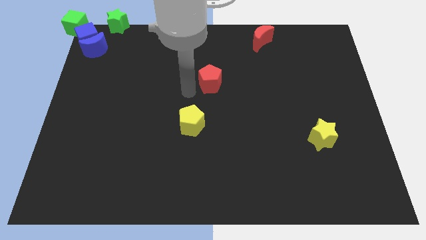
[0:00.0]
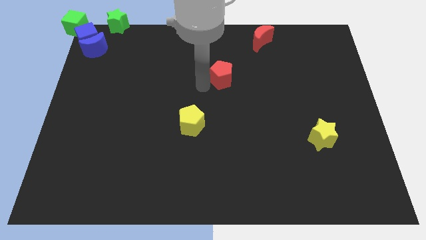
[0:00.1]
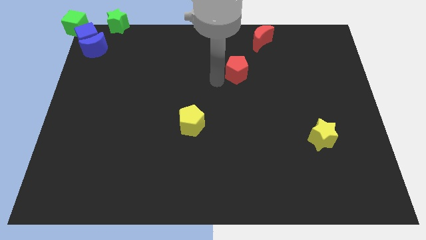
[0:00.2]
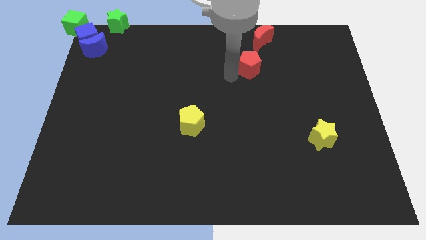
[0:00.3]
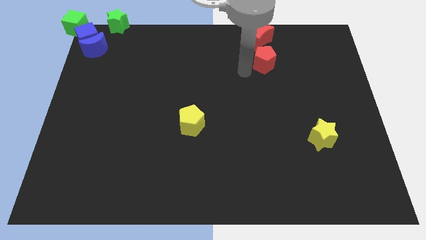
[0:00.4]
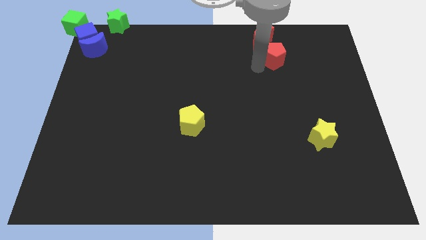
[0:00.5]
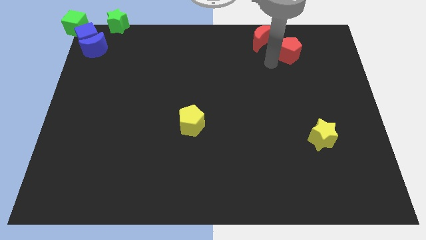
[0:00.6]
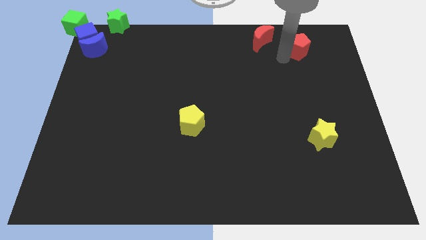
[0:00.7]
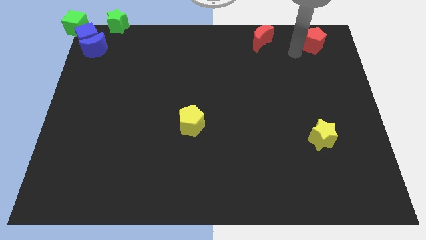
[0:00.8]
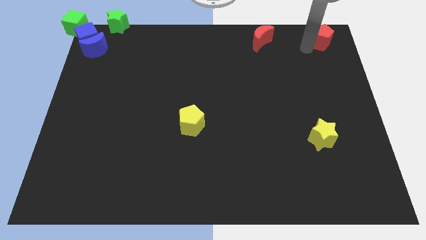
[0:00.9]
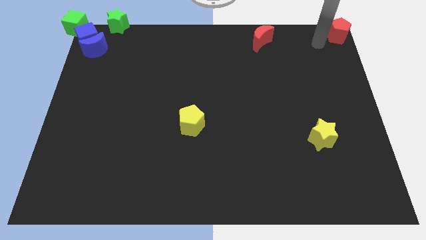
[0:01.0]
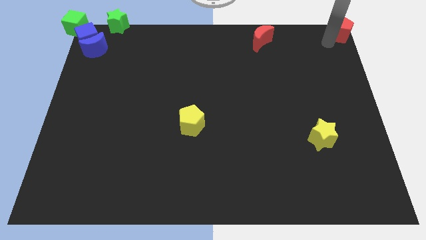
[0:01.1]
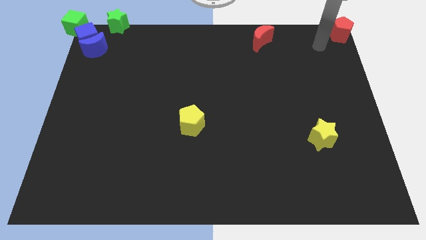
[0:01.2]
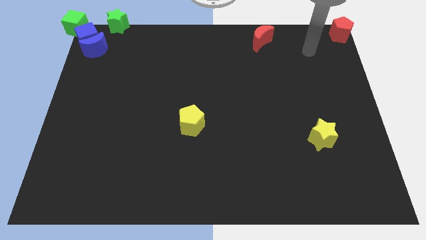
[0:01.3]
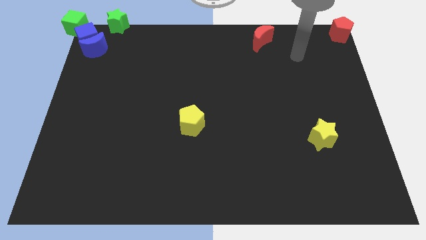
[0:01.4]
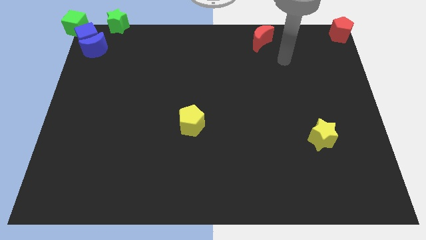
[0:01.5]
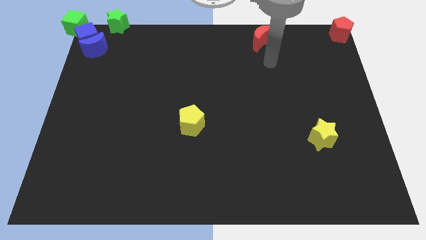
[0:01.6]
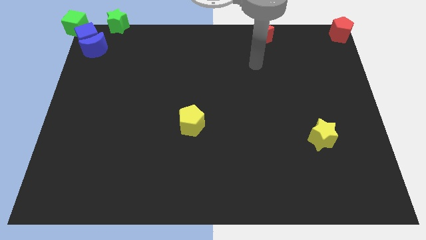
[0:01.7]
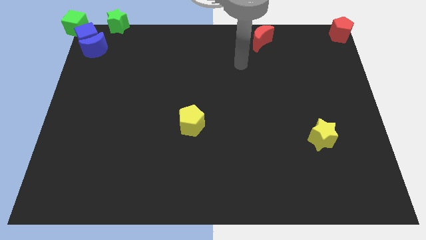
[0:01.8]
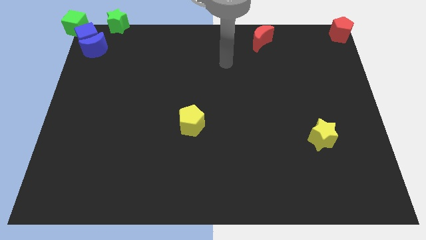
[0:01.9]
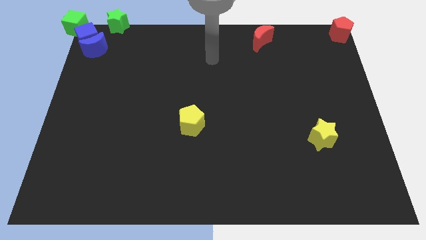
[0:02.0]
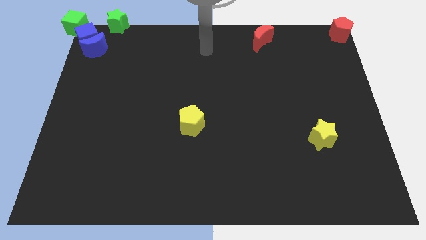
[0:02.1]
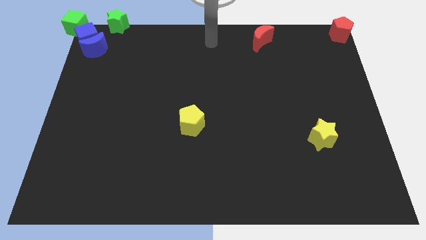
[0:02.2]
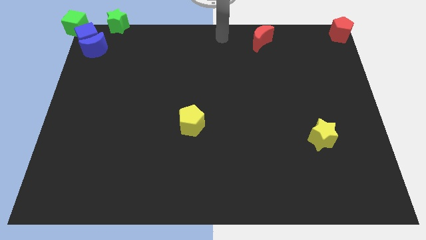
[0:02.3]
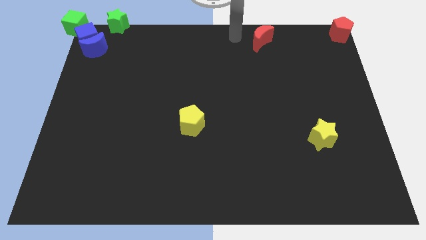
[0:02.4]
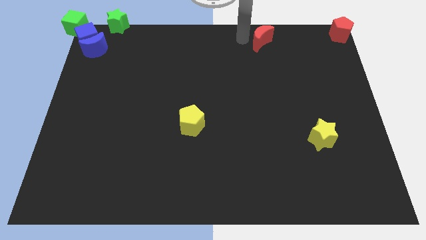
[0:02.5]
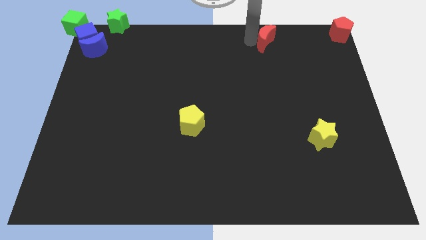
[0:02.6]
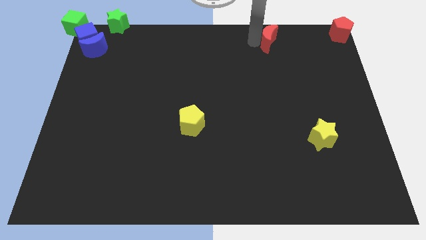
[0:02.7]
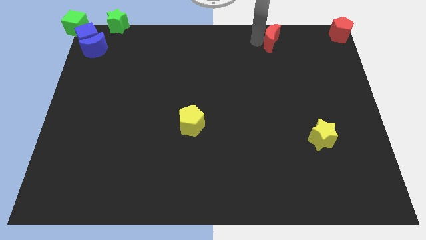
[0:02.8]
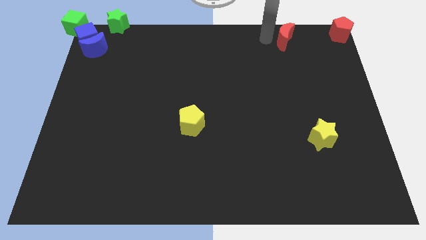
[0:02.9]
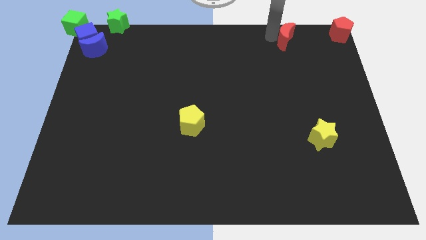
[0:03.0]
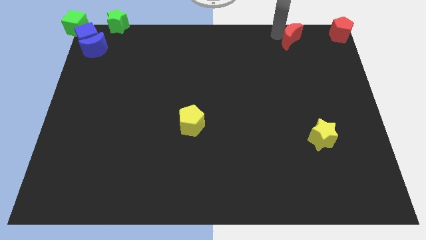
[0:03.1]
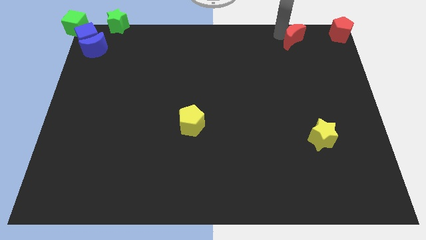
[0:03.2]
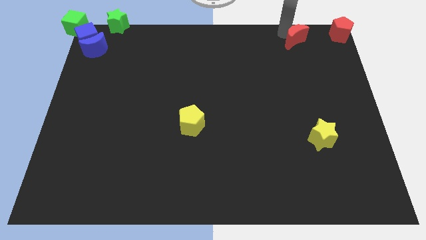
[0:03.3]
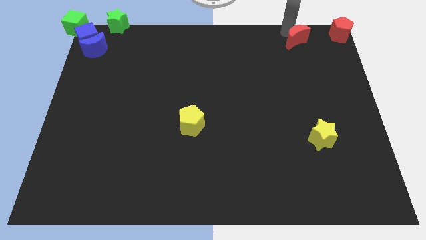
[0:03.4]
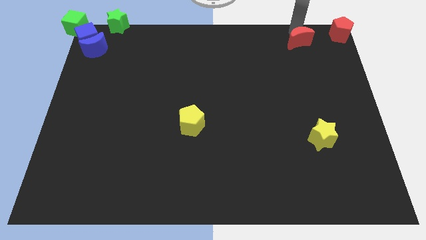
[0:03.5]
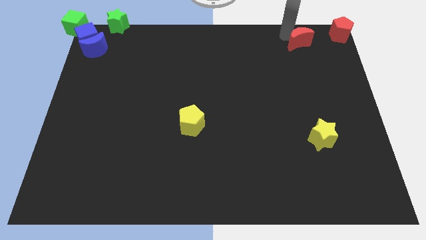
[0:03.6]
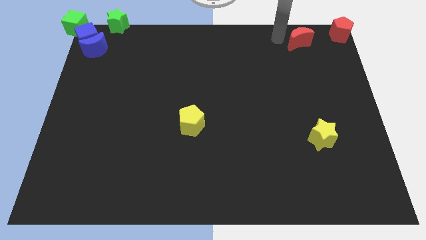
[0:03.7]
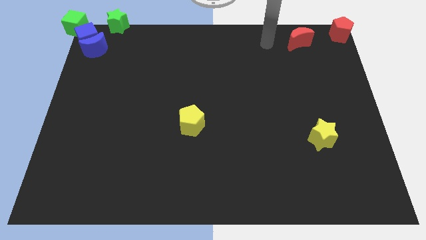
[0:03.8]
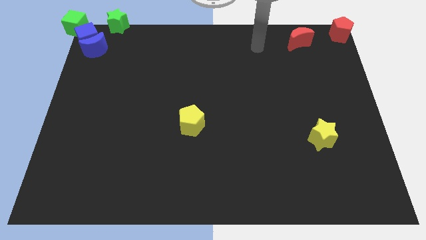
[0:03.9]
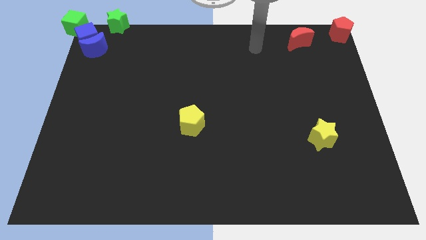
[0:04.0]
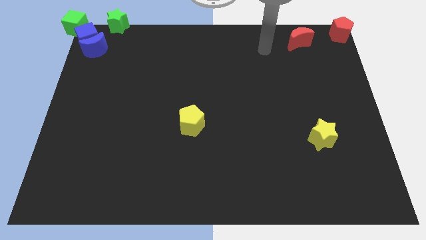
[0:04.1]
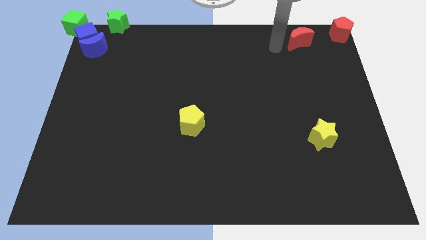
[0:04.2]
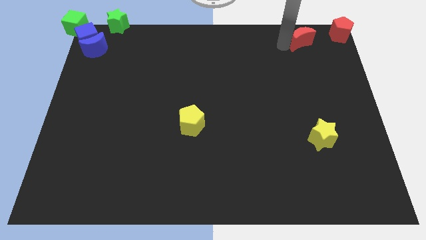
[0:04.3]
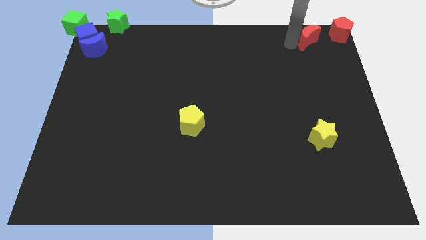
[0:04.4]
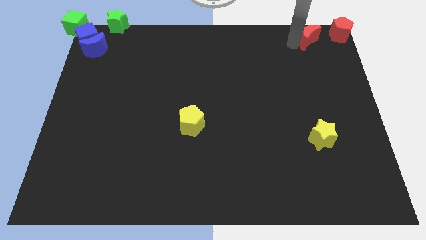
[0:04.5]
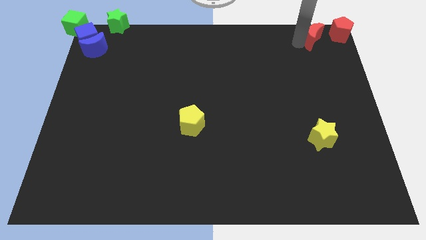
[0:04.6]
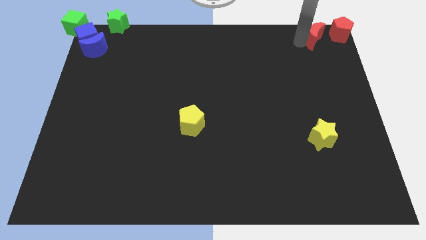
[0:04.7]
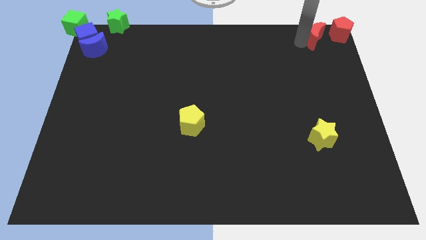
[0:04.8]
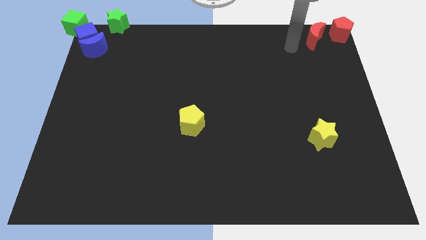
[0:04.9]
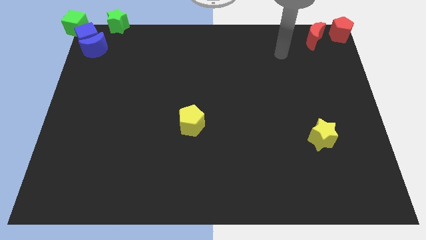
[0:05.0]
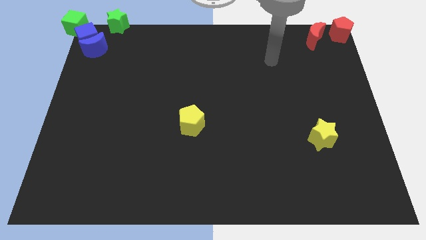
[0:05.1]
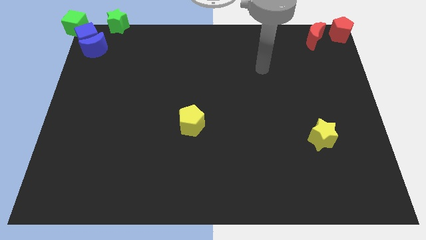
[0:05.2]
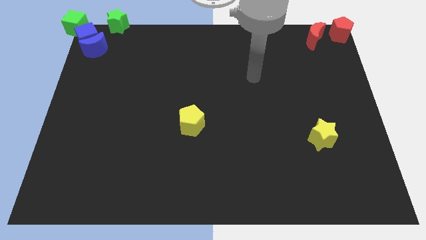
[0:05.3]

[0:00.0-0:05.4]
push both red crescent and red pentagon towards the top right of the board

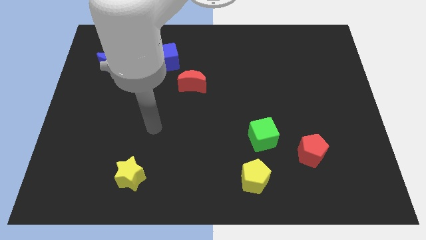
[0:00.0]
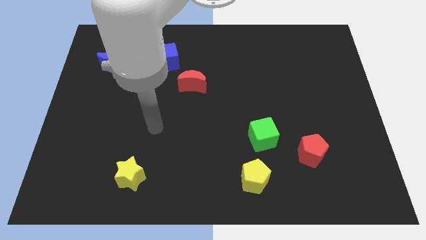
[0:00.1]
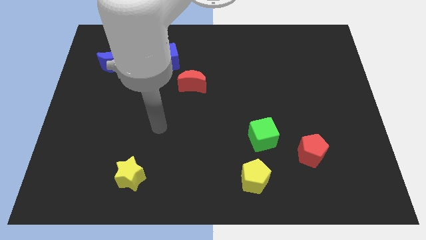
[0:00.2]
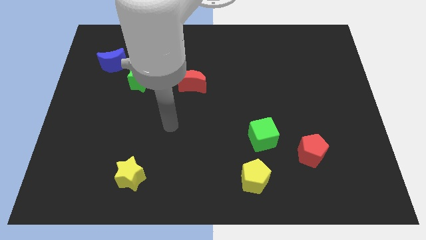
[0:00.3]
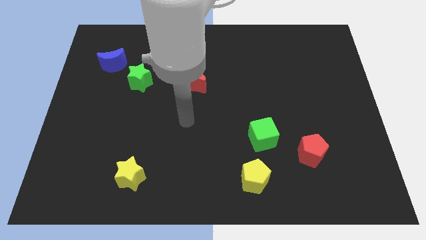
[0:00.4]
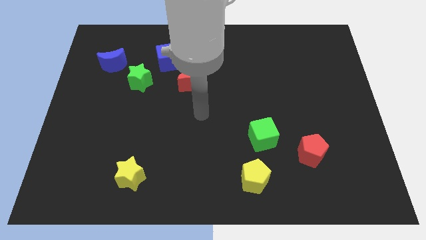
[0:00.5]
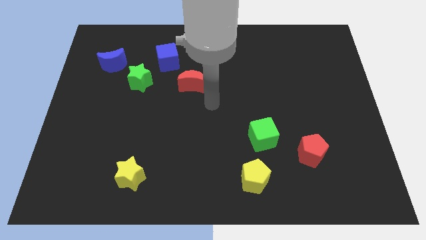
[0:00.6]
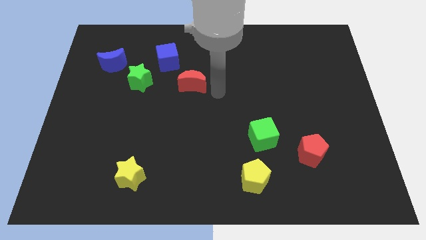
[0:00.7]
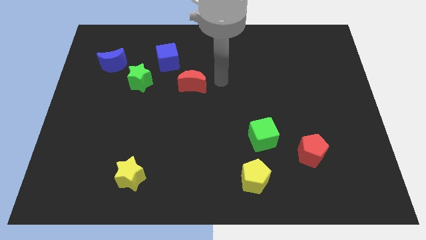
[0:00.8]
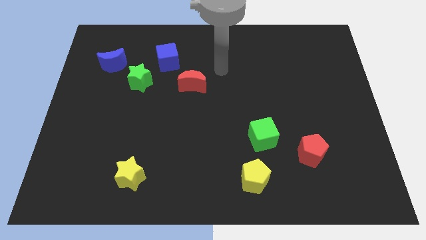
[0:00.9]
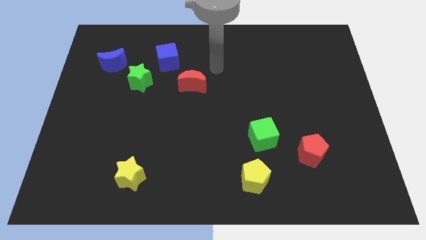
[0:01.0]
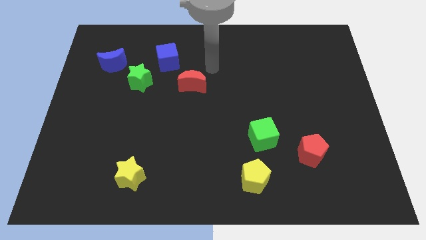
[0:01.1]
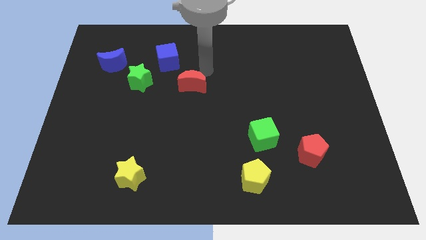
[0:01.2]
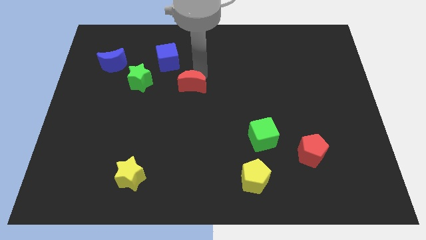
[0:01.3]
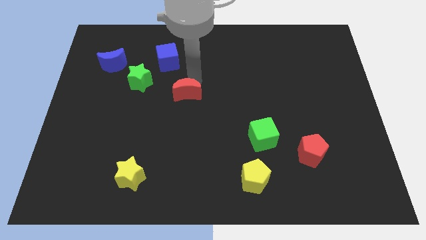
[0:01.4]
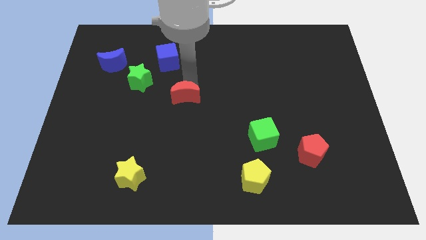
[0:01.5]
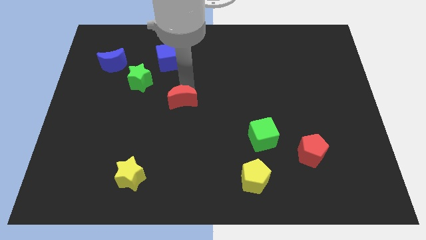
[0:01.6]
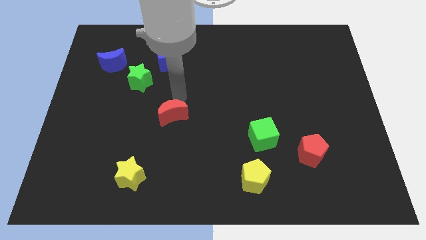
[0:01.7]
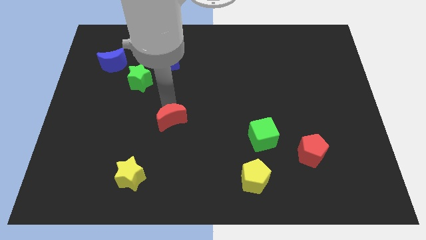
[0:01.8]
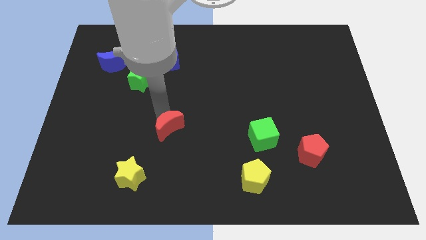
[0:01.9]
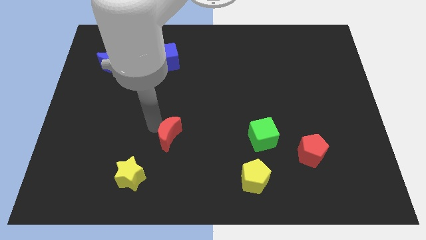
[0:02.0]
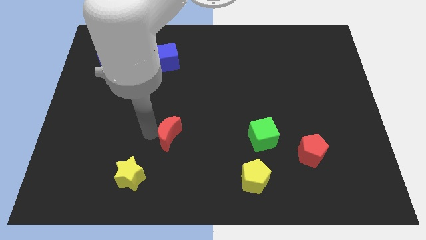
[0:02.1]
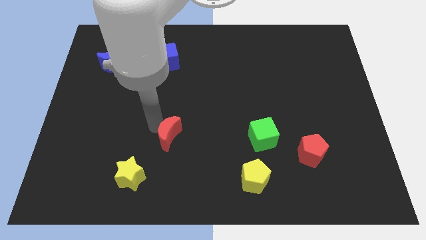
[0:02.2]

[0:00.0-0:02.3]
slide the red moon downwards

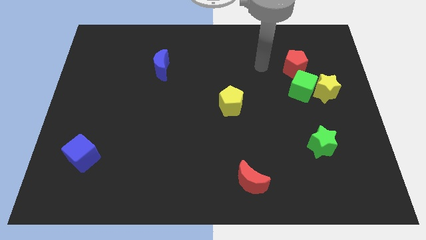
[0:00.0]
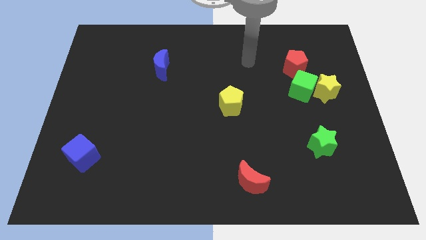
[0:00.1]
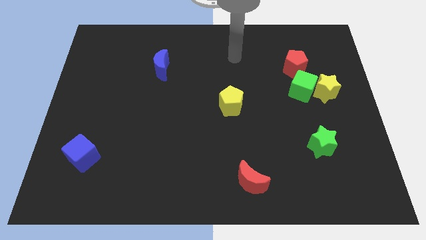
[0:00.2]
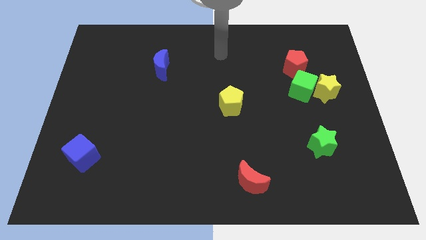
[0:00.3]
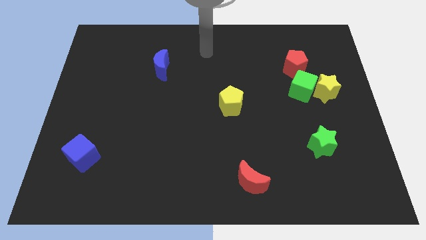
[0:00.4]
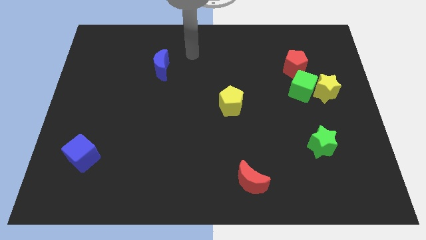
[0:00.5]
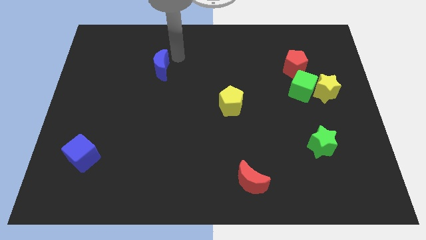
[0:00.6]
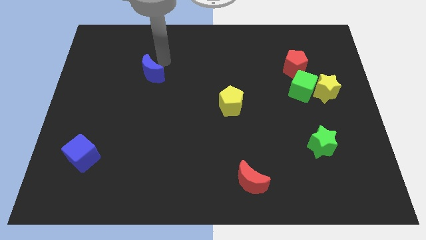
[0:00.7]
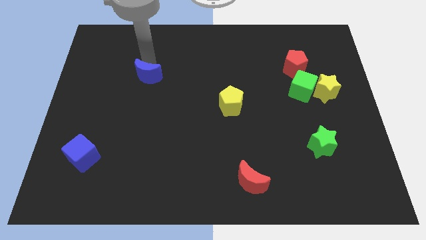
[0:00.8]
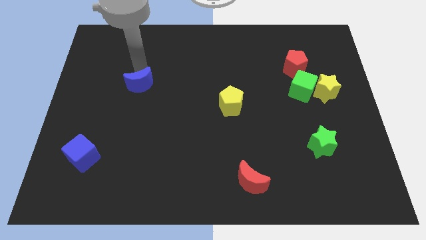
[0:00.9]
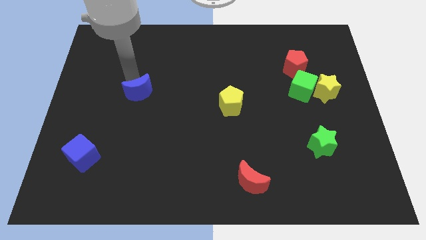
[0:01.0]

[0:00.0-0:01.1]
push blue moon to the left of yellow pentagon

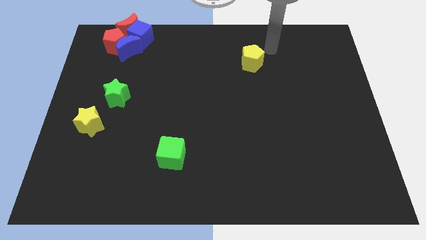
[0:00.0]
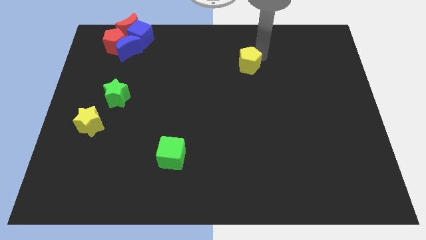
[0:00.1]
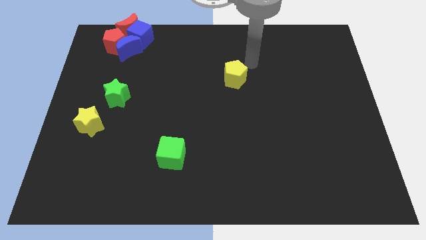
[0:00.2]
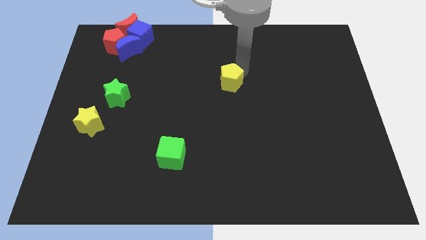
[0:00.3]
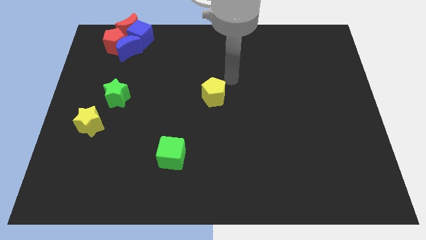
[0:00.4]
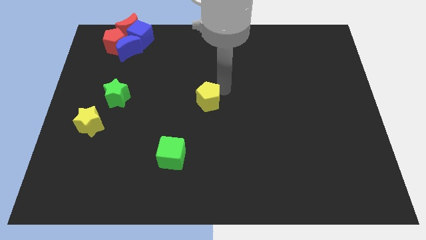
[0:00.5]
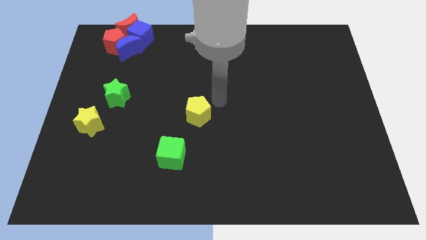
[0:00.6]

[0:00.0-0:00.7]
place the yellow pentagon at the center of the board
